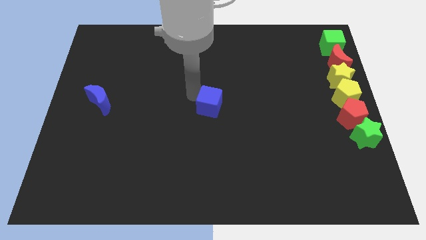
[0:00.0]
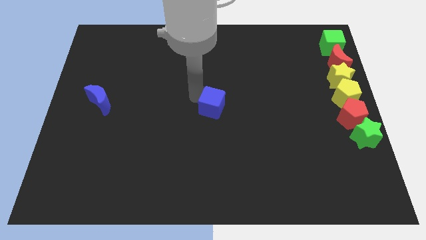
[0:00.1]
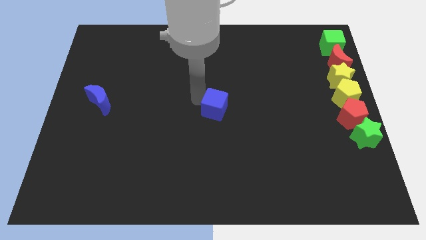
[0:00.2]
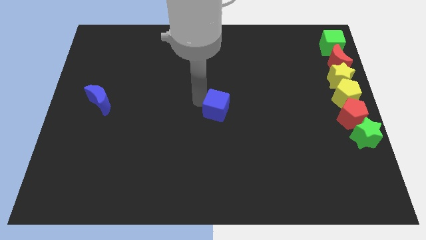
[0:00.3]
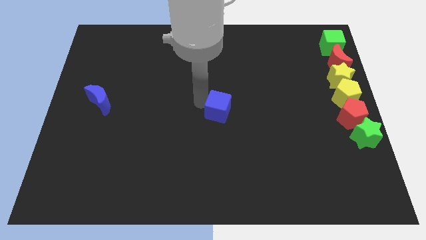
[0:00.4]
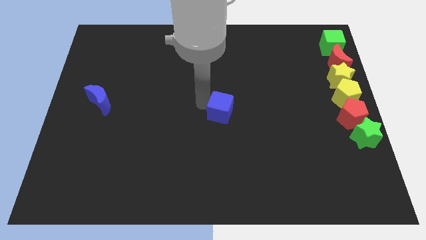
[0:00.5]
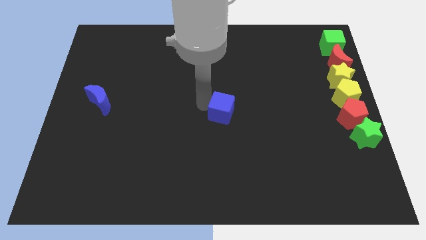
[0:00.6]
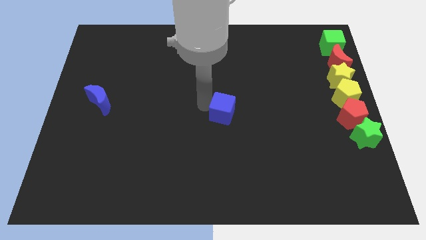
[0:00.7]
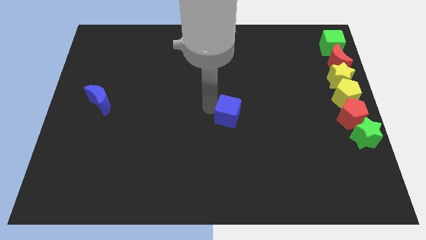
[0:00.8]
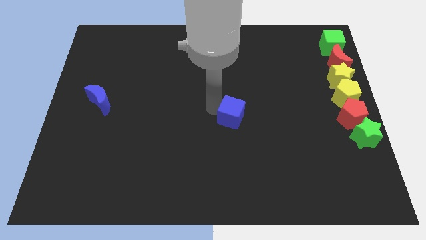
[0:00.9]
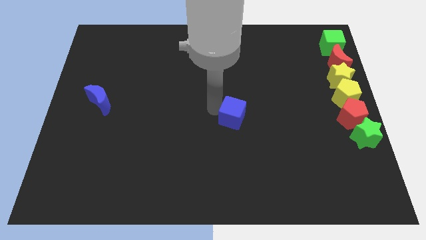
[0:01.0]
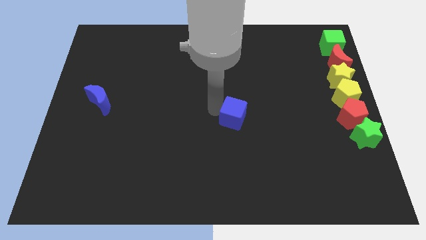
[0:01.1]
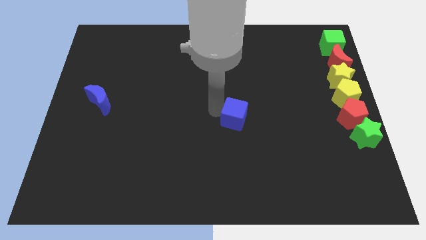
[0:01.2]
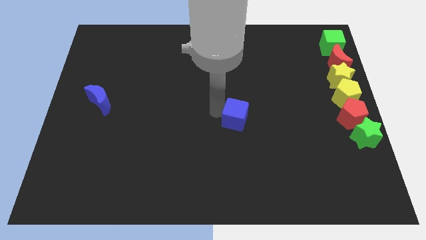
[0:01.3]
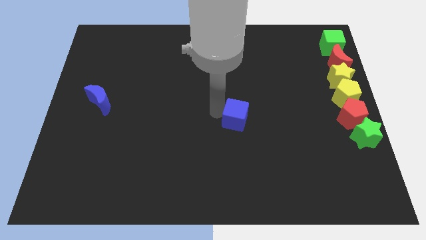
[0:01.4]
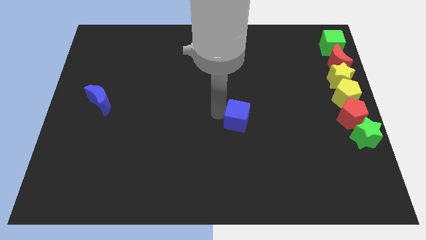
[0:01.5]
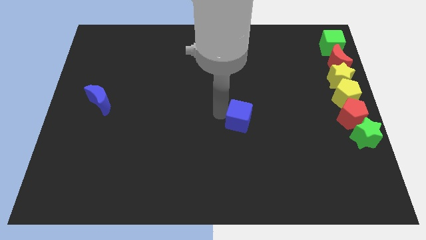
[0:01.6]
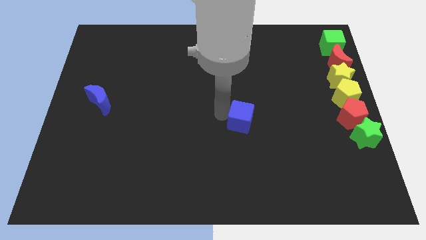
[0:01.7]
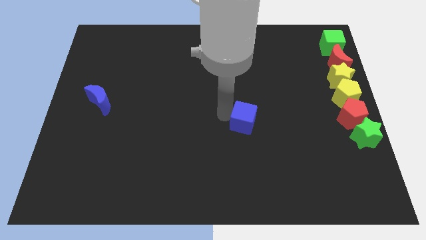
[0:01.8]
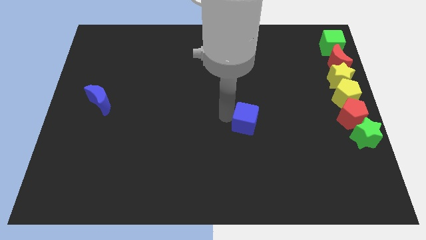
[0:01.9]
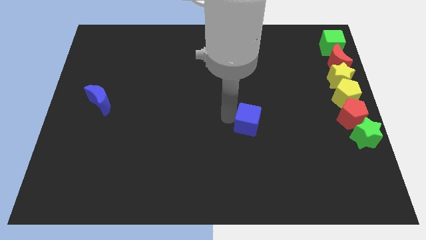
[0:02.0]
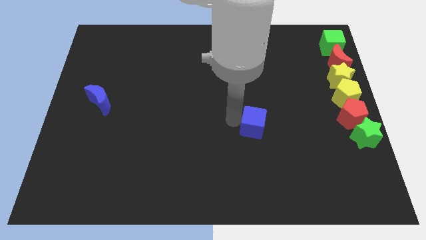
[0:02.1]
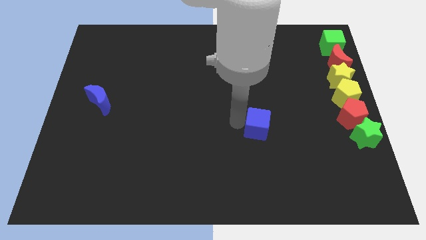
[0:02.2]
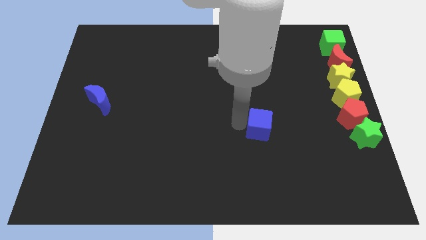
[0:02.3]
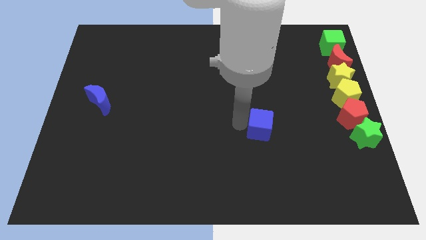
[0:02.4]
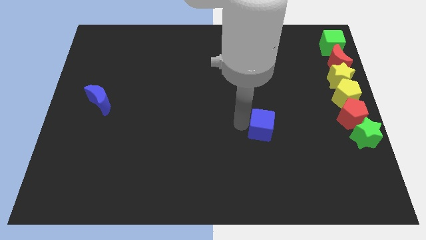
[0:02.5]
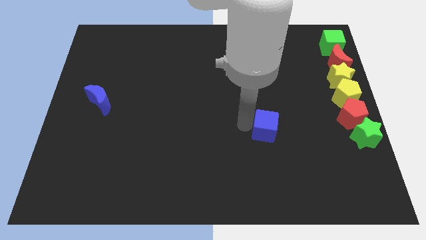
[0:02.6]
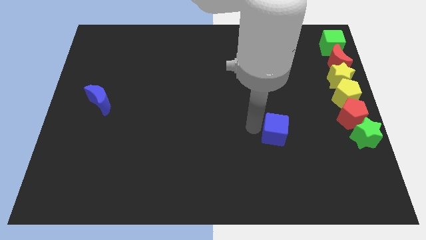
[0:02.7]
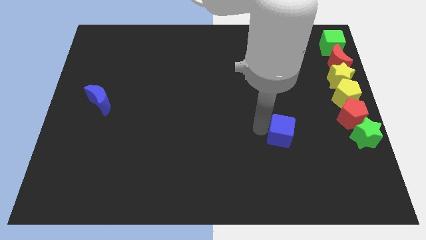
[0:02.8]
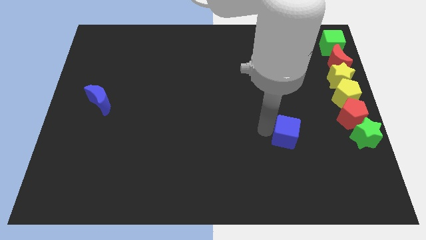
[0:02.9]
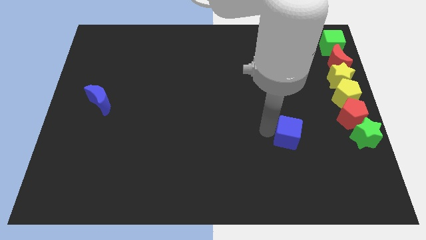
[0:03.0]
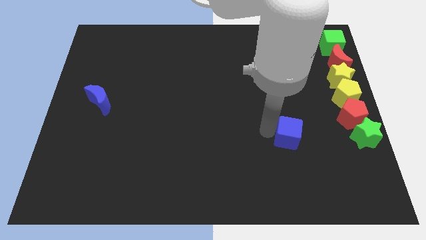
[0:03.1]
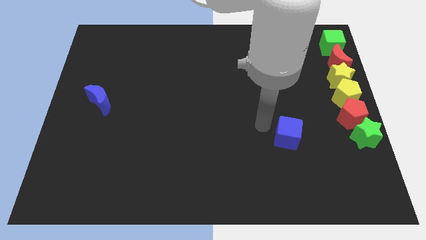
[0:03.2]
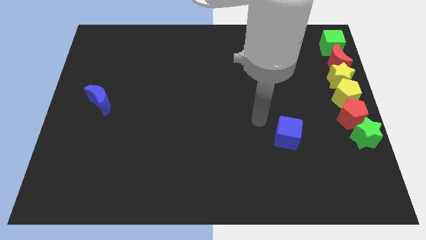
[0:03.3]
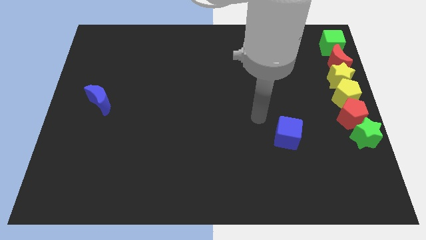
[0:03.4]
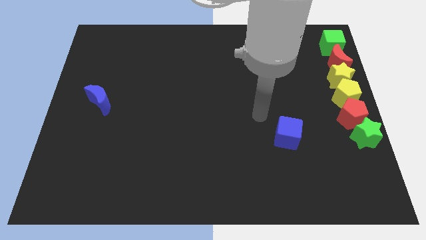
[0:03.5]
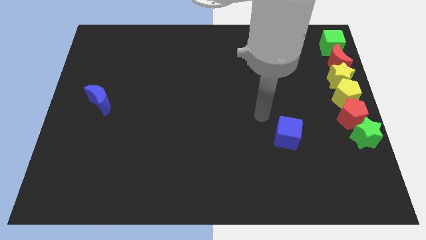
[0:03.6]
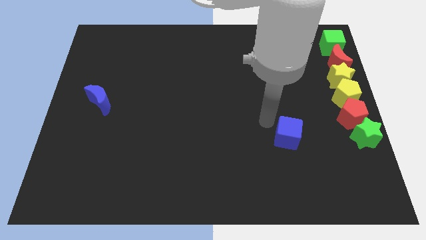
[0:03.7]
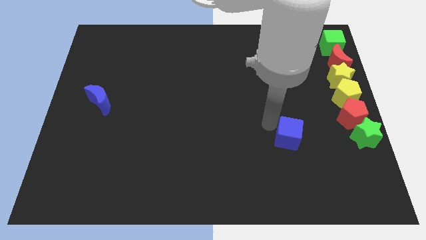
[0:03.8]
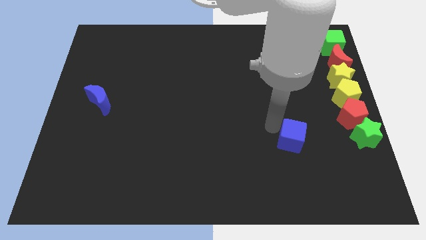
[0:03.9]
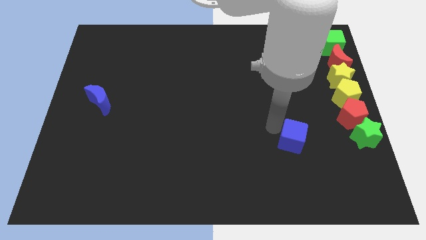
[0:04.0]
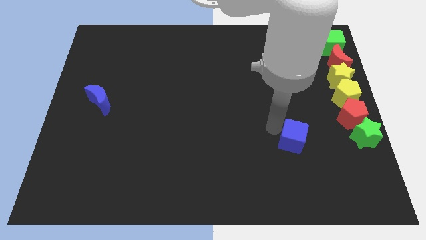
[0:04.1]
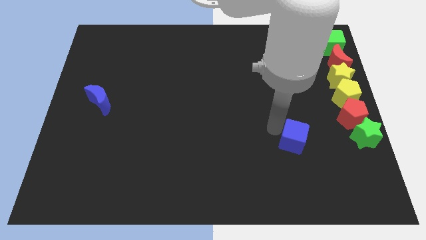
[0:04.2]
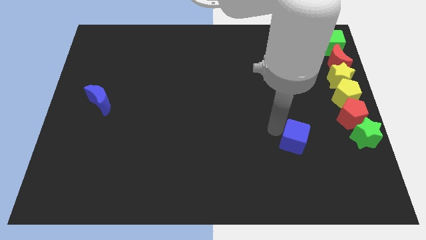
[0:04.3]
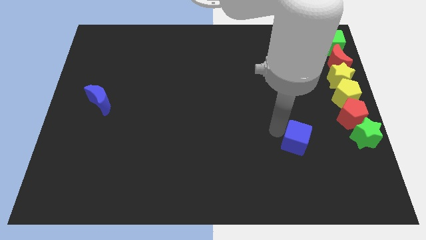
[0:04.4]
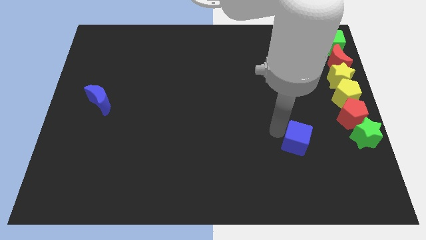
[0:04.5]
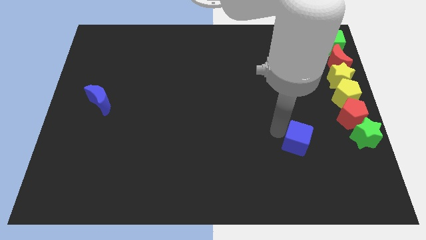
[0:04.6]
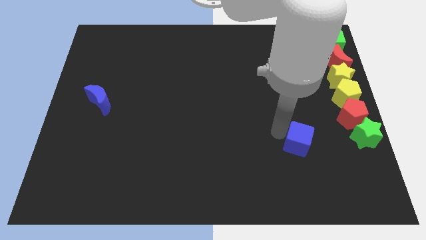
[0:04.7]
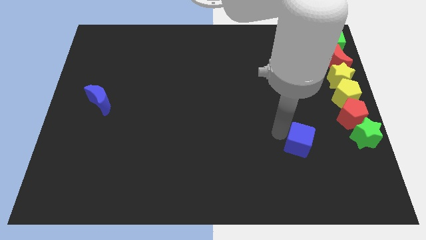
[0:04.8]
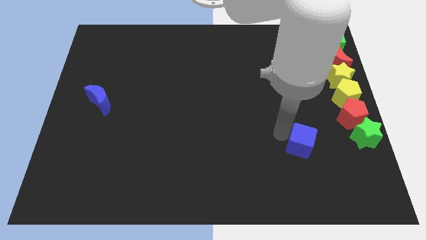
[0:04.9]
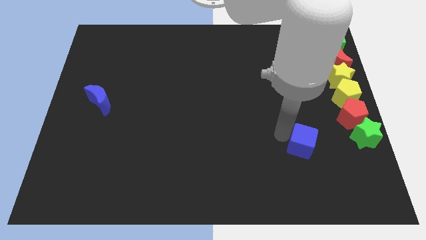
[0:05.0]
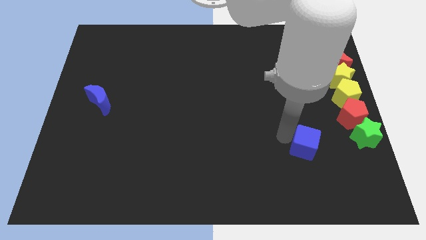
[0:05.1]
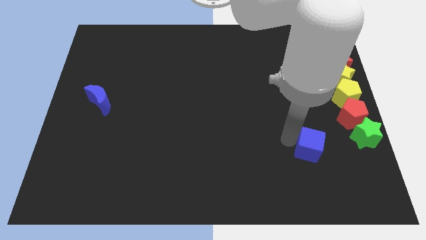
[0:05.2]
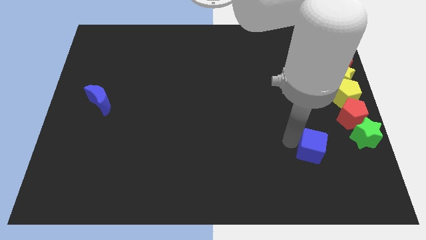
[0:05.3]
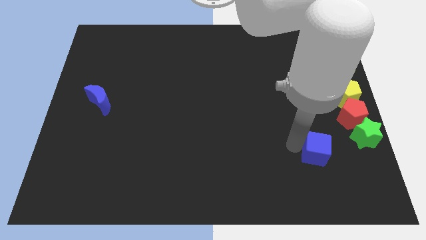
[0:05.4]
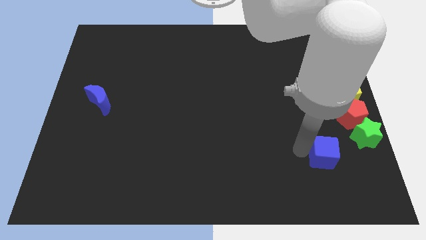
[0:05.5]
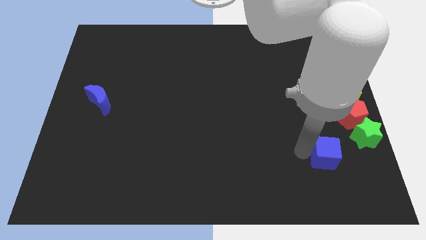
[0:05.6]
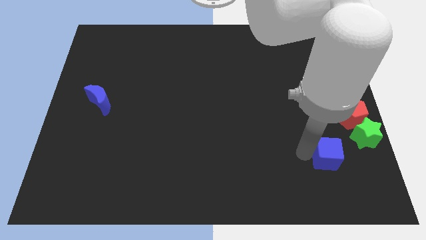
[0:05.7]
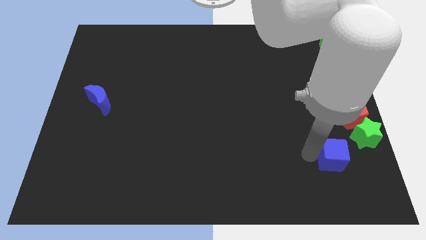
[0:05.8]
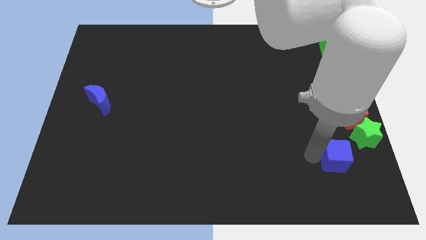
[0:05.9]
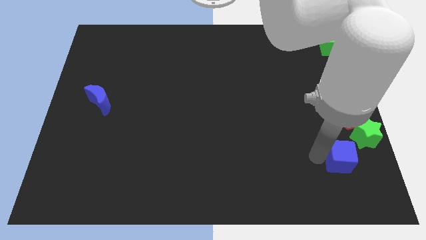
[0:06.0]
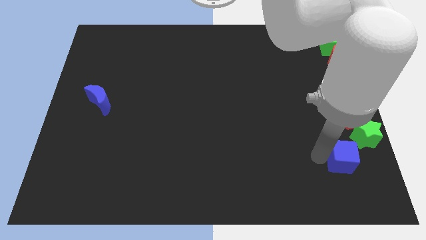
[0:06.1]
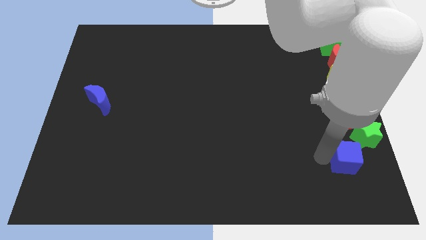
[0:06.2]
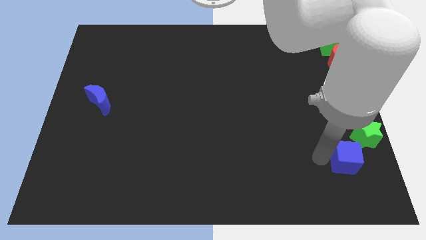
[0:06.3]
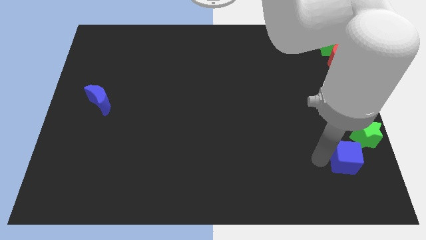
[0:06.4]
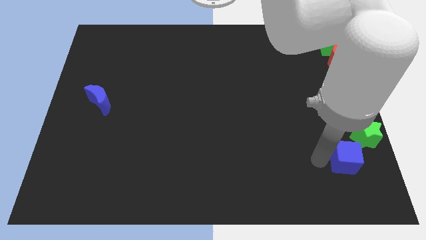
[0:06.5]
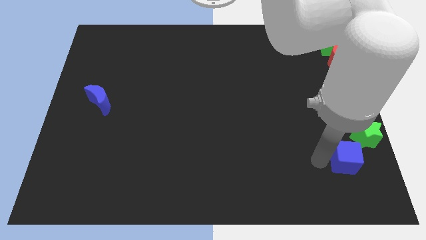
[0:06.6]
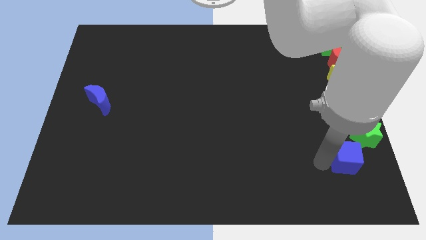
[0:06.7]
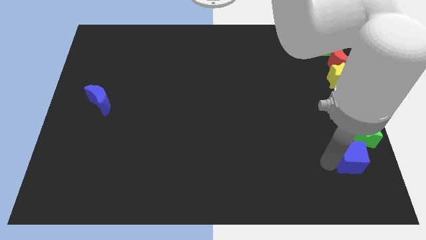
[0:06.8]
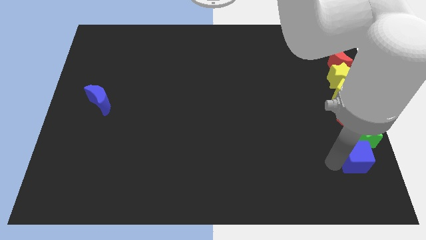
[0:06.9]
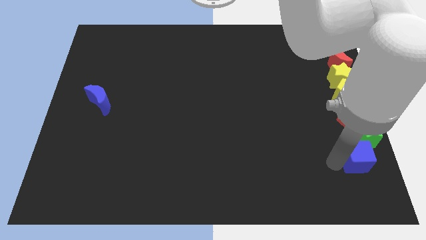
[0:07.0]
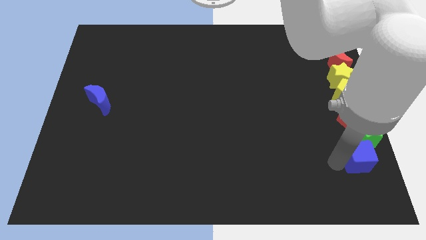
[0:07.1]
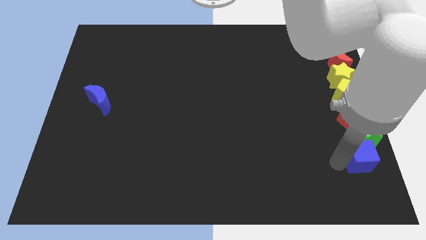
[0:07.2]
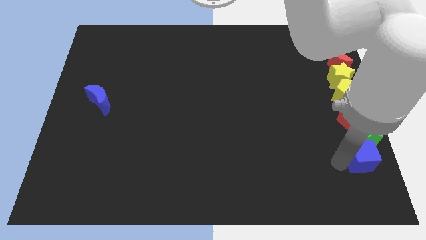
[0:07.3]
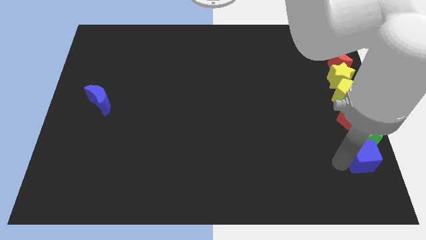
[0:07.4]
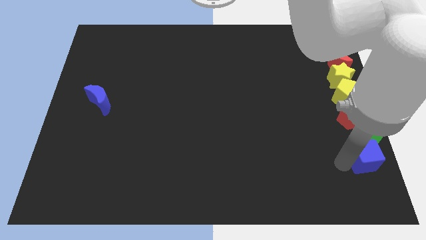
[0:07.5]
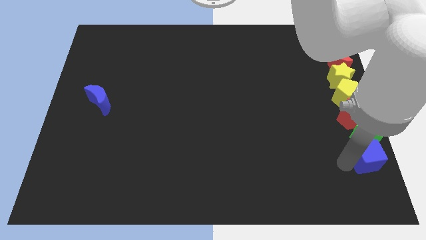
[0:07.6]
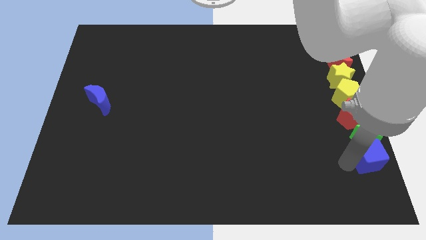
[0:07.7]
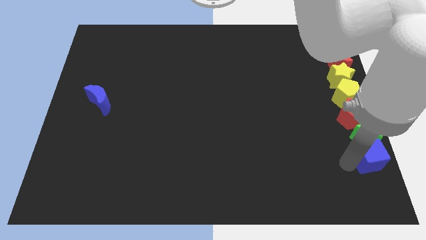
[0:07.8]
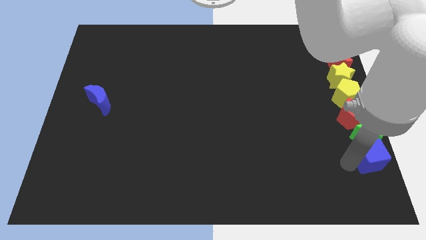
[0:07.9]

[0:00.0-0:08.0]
place the blue cube below the green star

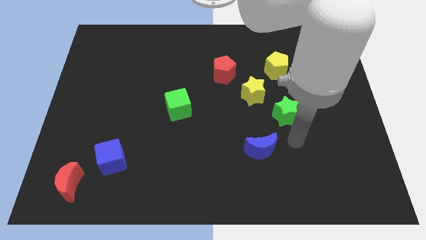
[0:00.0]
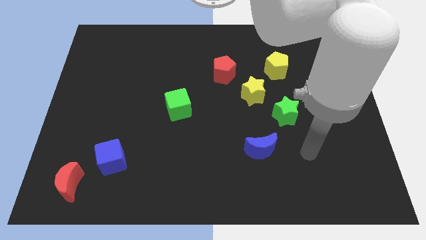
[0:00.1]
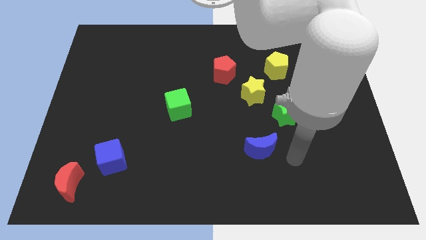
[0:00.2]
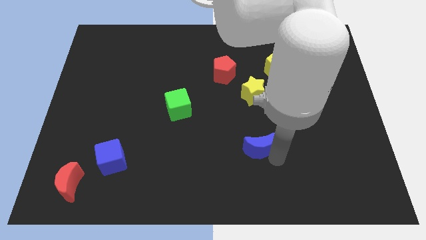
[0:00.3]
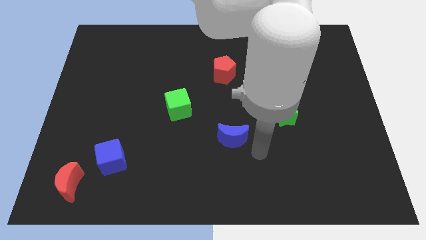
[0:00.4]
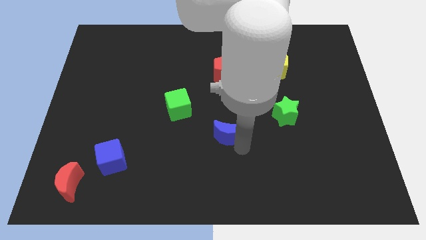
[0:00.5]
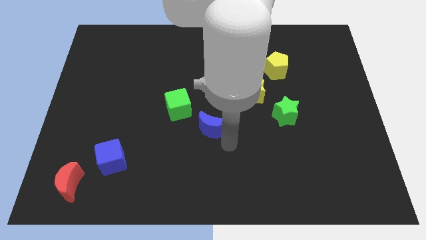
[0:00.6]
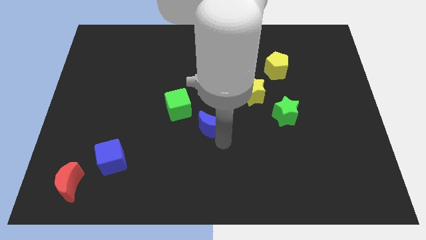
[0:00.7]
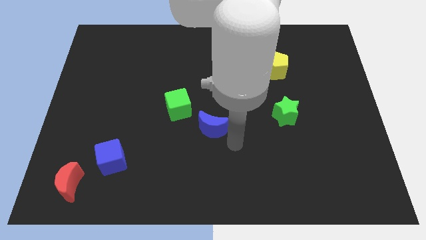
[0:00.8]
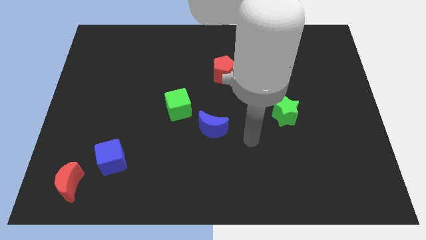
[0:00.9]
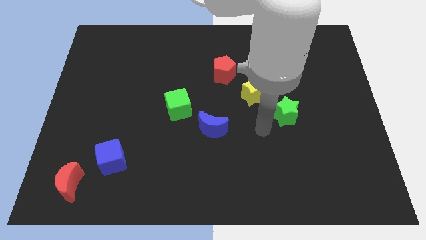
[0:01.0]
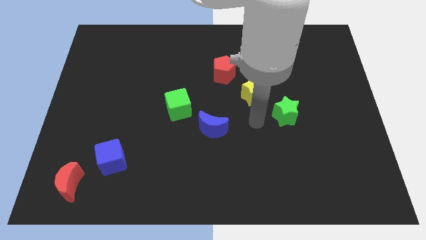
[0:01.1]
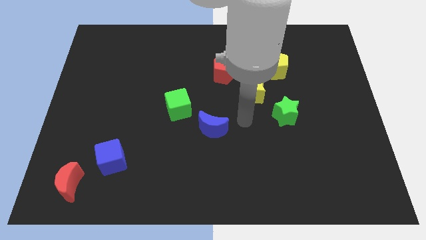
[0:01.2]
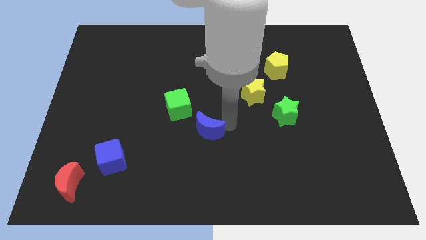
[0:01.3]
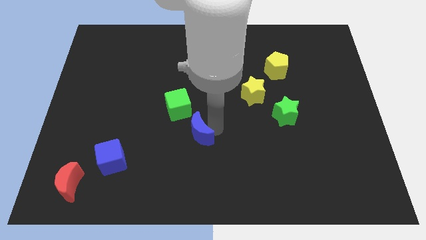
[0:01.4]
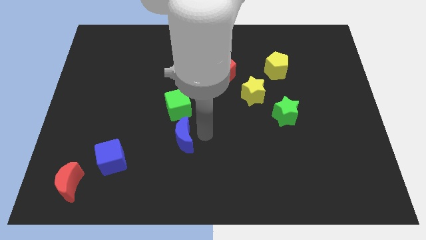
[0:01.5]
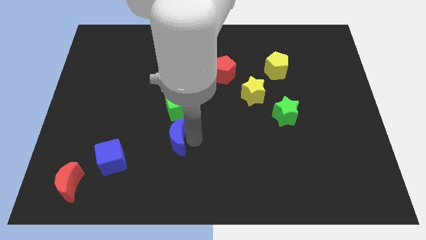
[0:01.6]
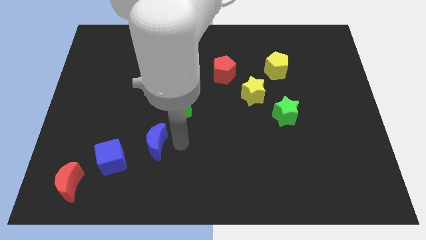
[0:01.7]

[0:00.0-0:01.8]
move the blue moon to the bottom side of the green cube
